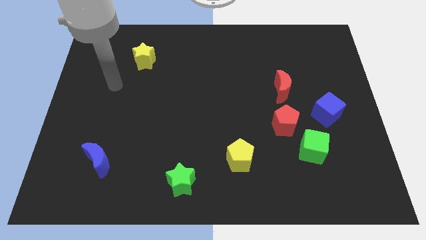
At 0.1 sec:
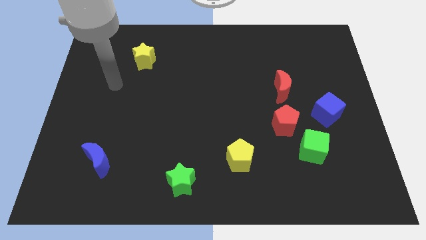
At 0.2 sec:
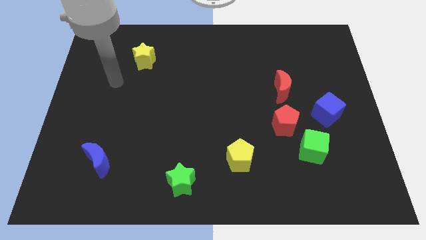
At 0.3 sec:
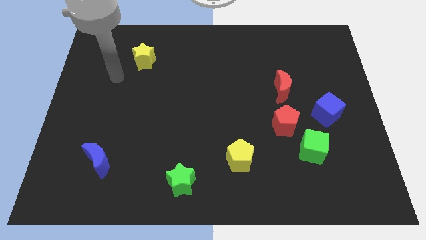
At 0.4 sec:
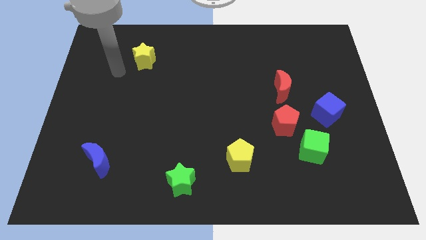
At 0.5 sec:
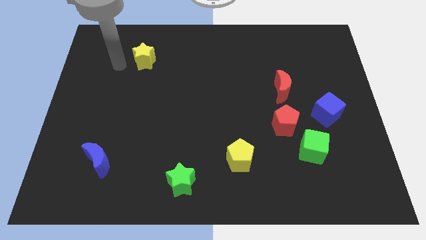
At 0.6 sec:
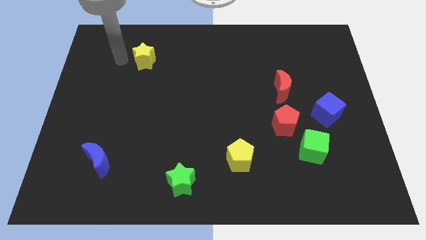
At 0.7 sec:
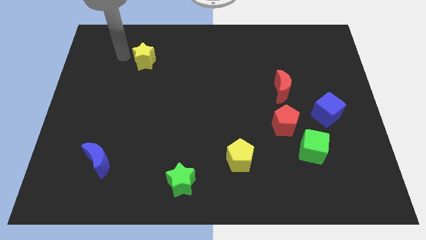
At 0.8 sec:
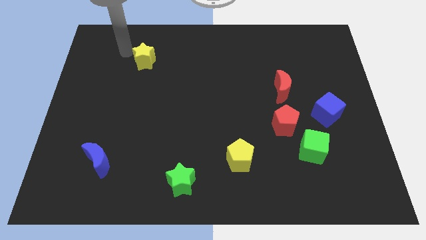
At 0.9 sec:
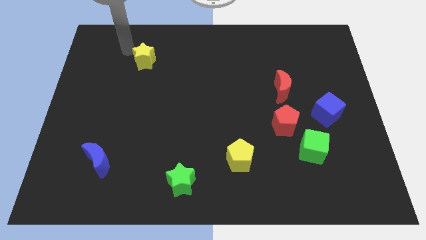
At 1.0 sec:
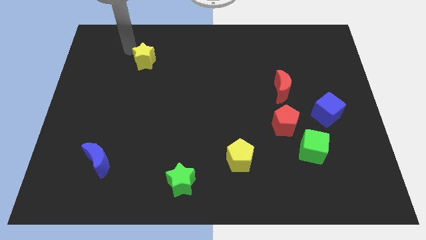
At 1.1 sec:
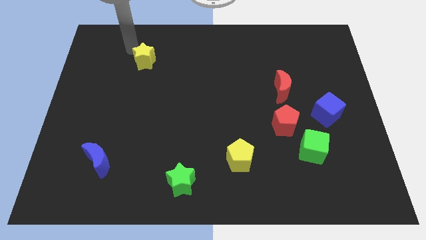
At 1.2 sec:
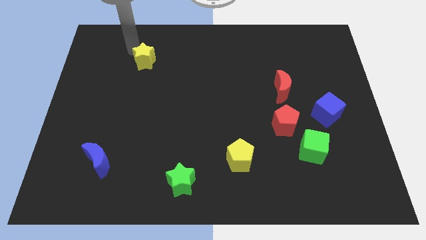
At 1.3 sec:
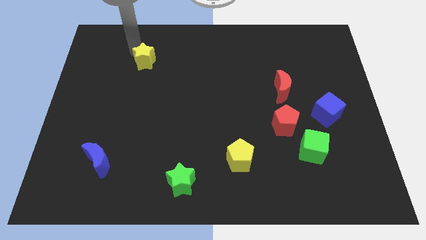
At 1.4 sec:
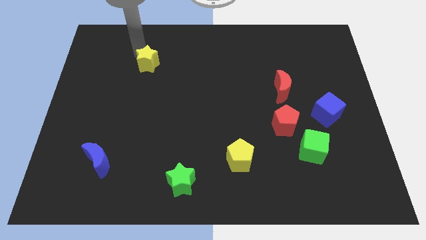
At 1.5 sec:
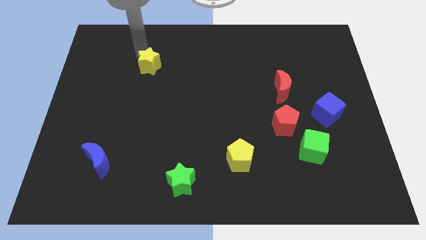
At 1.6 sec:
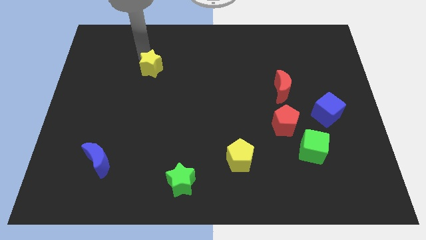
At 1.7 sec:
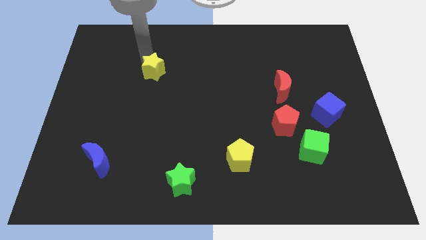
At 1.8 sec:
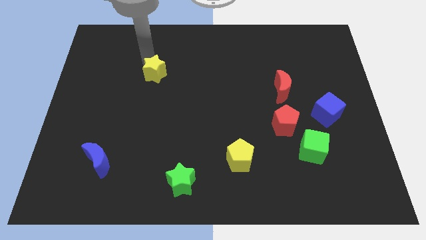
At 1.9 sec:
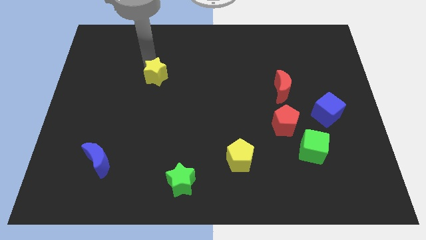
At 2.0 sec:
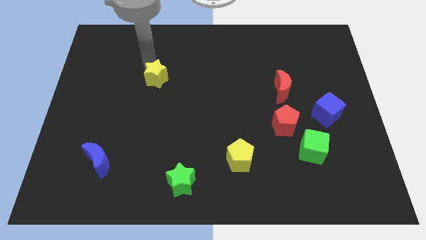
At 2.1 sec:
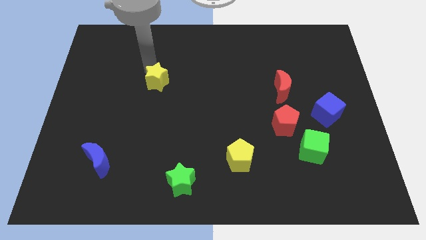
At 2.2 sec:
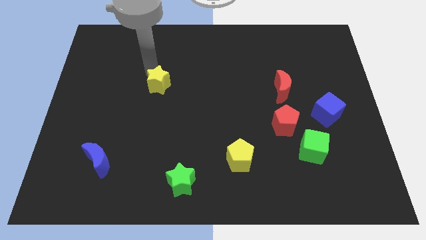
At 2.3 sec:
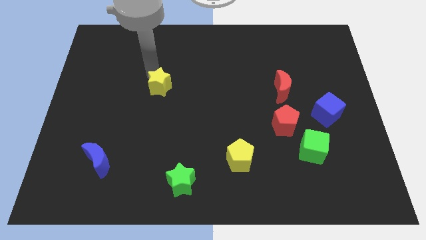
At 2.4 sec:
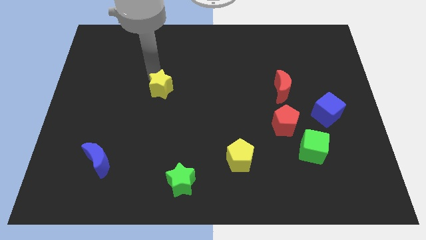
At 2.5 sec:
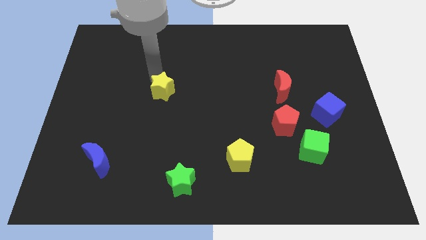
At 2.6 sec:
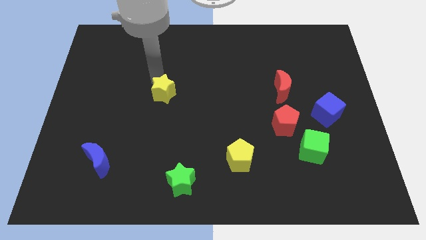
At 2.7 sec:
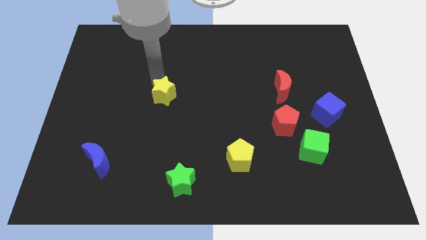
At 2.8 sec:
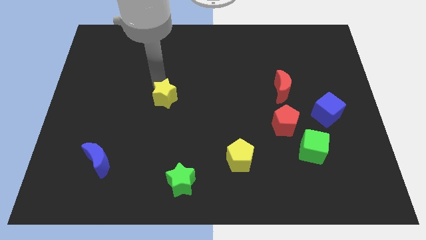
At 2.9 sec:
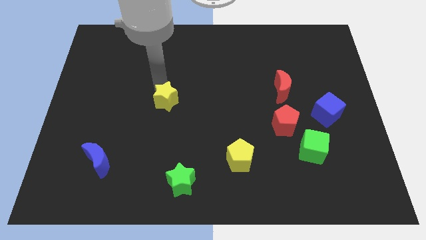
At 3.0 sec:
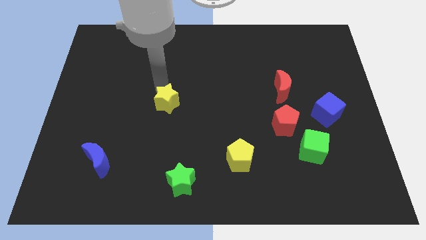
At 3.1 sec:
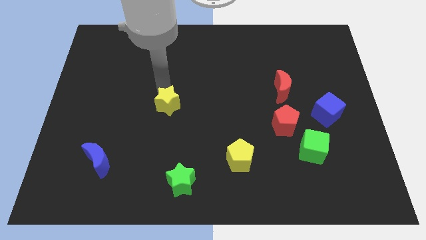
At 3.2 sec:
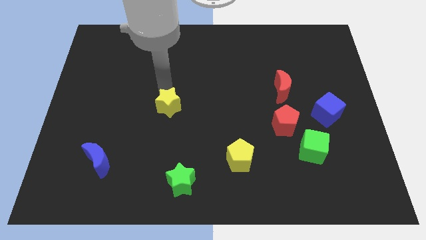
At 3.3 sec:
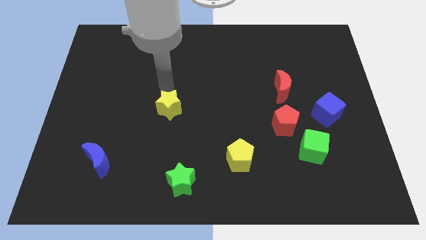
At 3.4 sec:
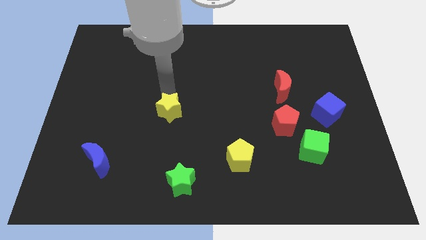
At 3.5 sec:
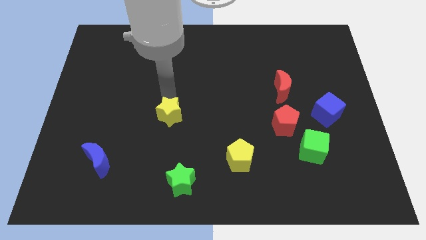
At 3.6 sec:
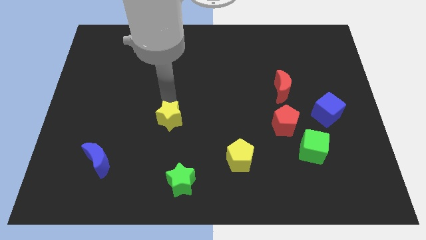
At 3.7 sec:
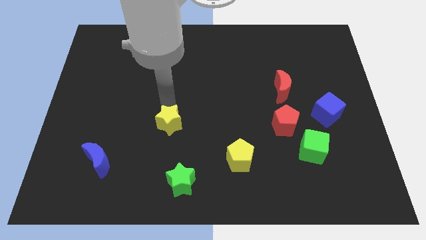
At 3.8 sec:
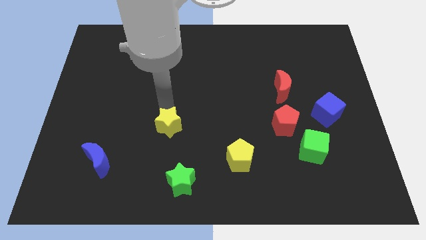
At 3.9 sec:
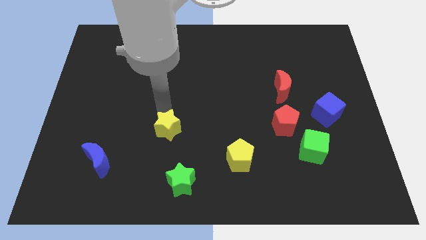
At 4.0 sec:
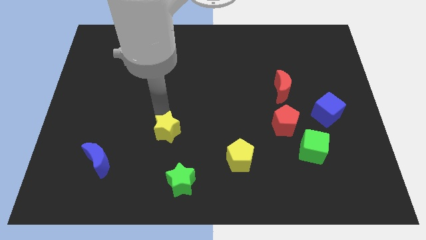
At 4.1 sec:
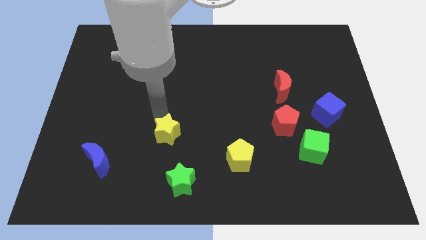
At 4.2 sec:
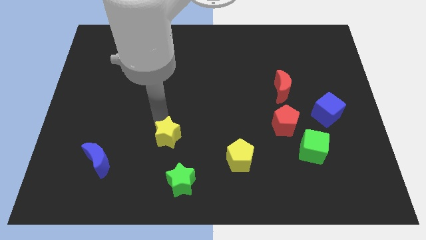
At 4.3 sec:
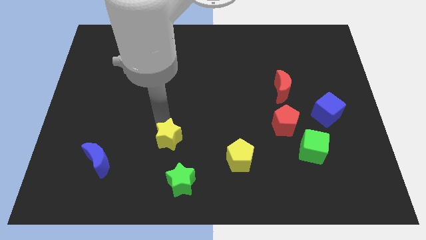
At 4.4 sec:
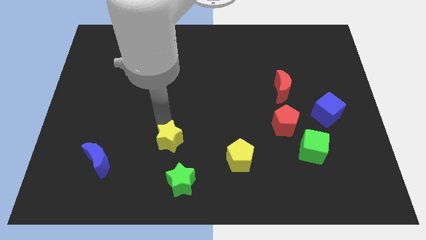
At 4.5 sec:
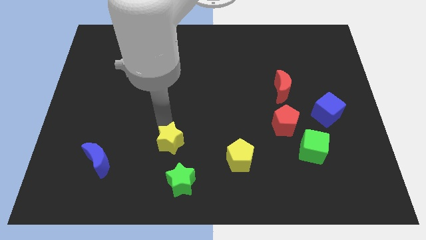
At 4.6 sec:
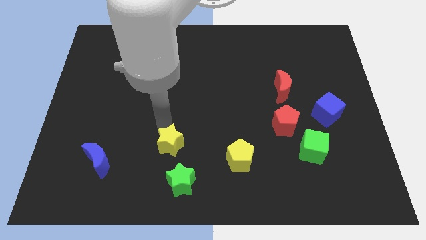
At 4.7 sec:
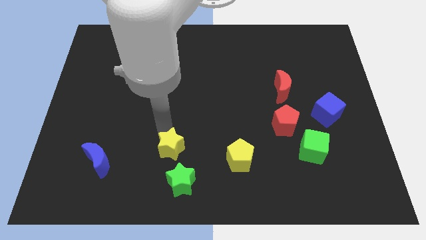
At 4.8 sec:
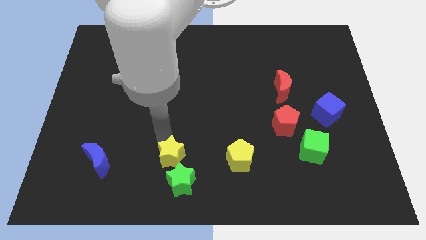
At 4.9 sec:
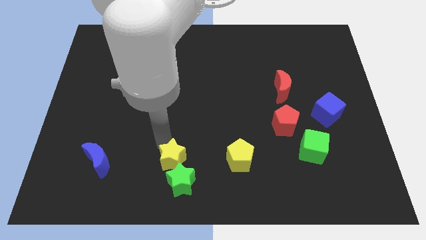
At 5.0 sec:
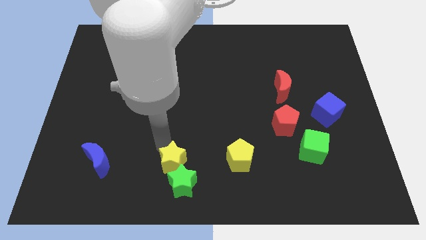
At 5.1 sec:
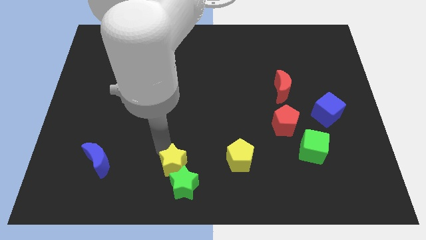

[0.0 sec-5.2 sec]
slide the yellow star next to the green star

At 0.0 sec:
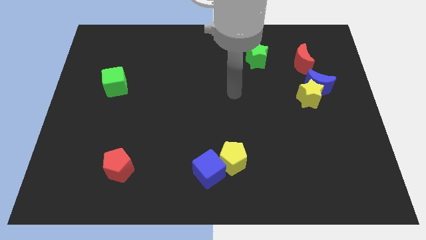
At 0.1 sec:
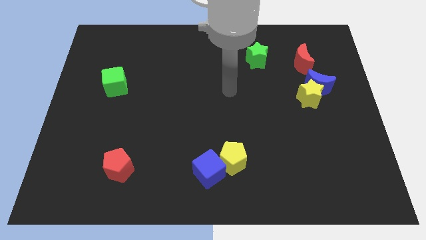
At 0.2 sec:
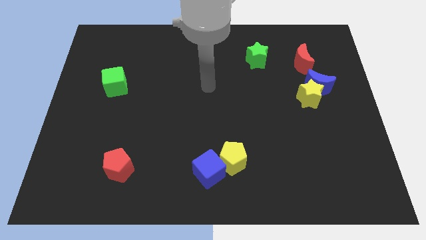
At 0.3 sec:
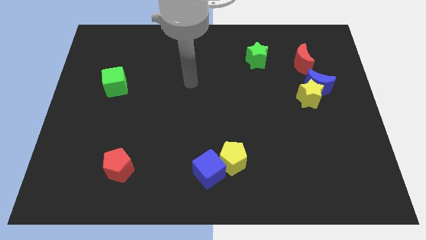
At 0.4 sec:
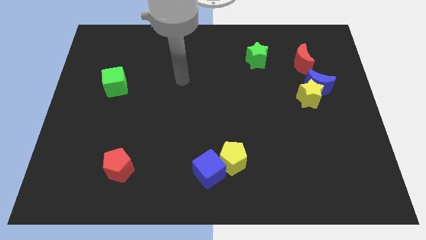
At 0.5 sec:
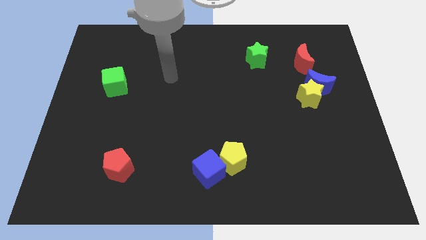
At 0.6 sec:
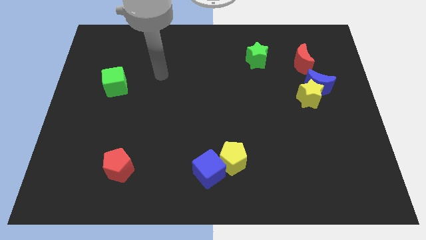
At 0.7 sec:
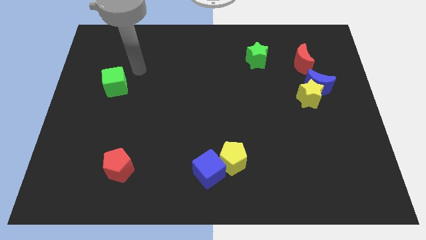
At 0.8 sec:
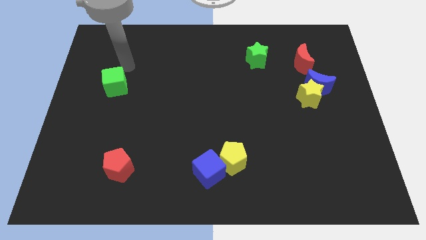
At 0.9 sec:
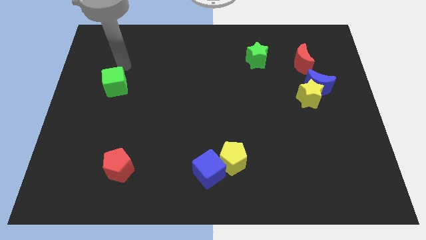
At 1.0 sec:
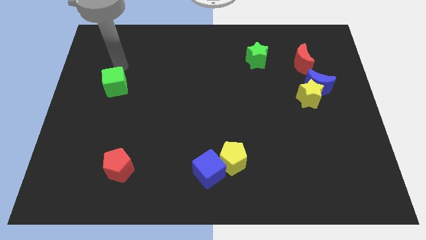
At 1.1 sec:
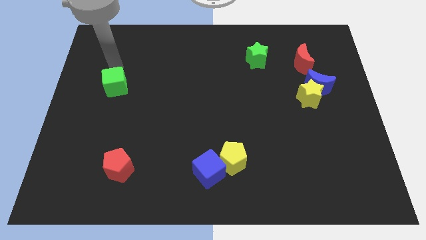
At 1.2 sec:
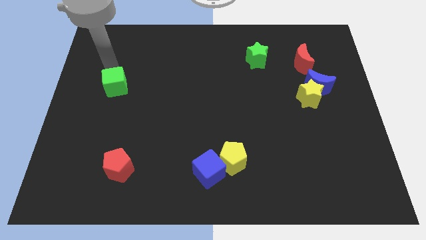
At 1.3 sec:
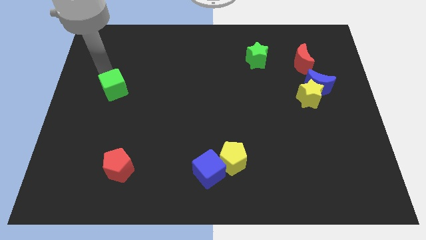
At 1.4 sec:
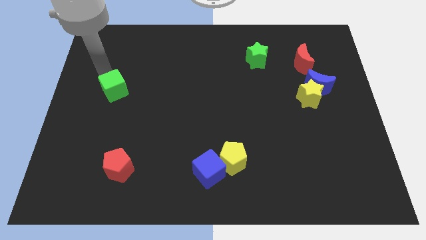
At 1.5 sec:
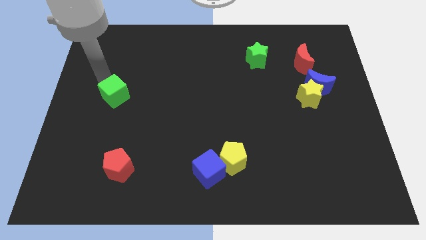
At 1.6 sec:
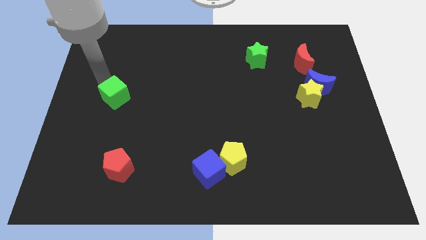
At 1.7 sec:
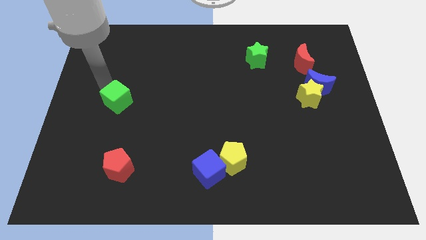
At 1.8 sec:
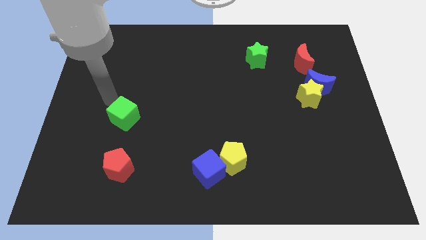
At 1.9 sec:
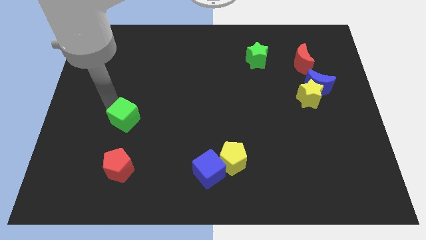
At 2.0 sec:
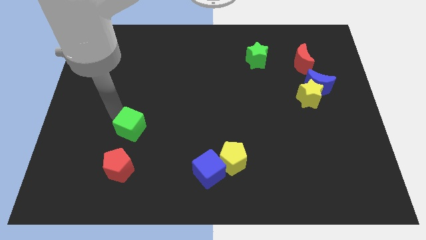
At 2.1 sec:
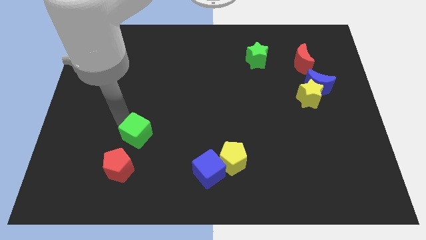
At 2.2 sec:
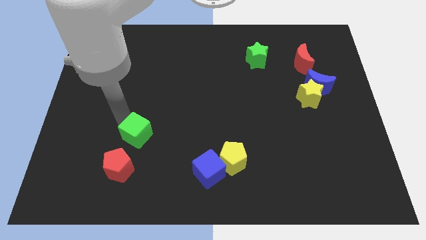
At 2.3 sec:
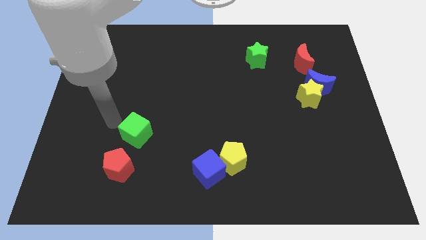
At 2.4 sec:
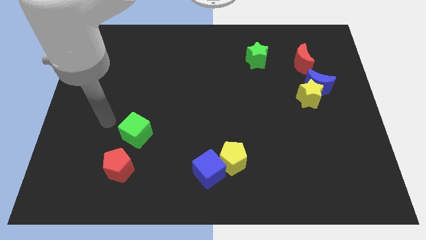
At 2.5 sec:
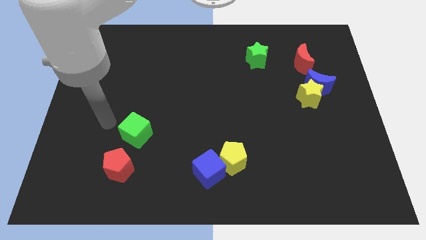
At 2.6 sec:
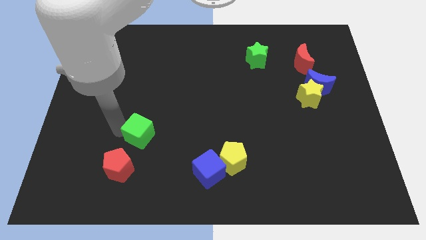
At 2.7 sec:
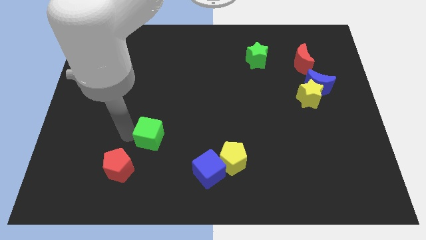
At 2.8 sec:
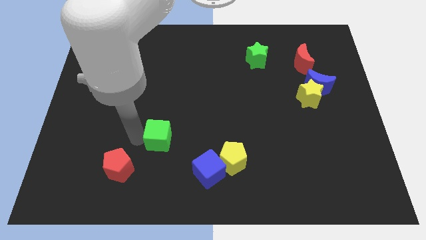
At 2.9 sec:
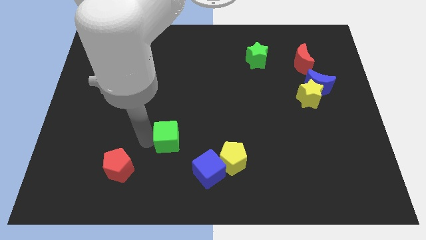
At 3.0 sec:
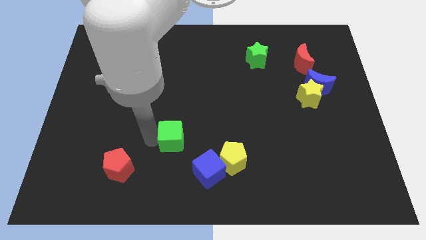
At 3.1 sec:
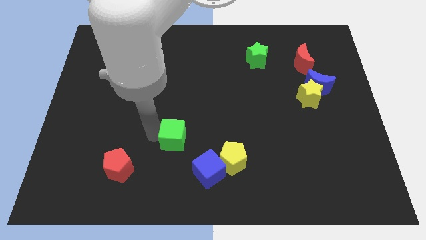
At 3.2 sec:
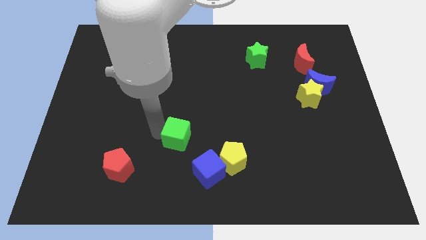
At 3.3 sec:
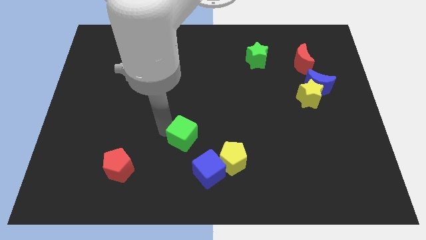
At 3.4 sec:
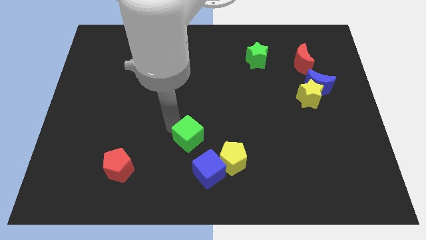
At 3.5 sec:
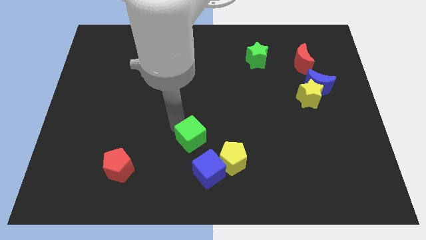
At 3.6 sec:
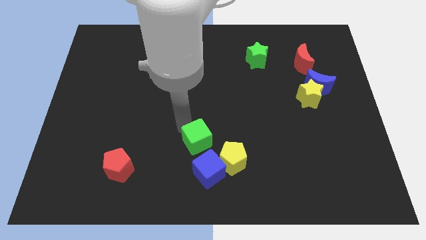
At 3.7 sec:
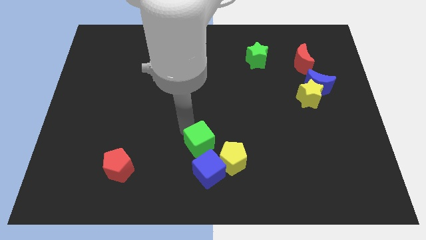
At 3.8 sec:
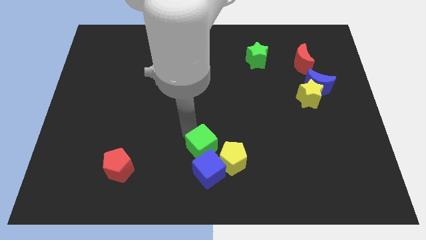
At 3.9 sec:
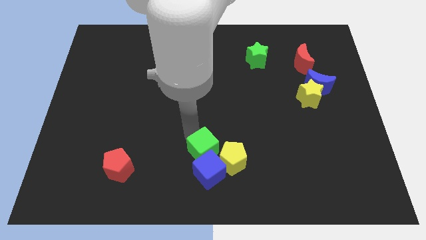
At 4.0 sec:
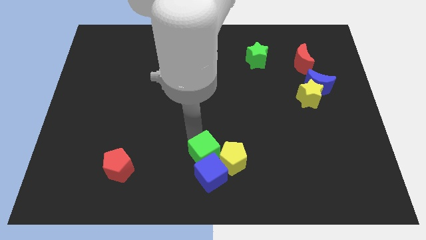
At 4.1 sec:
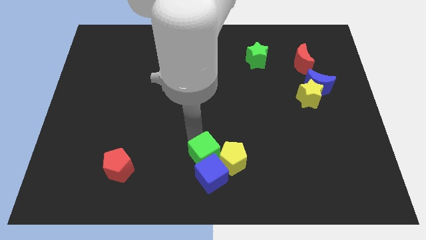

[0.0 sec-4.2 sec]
put the green cube next to the blue cube
